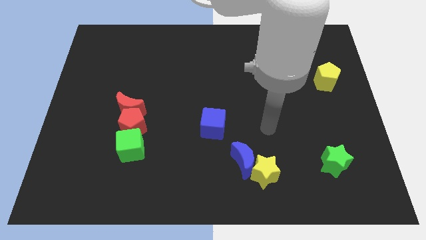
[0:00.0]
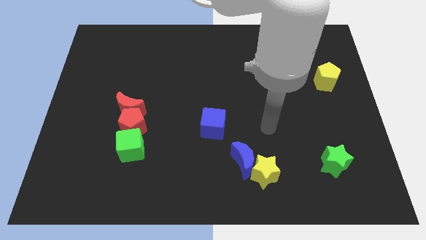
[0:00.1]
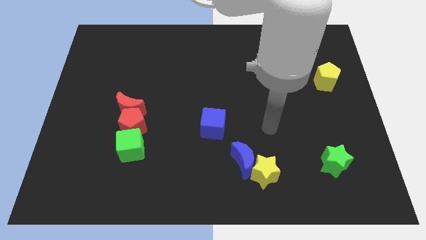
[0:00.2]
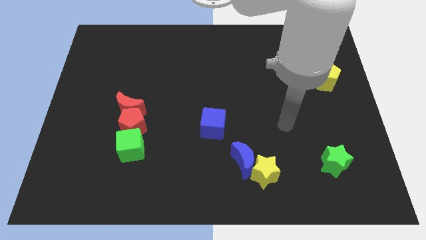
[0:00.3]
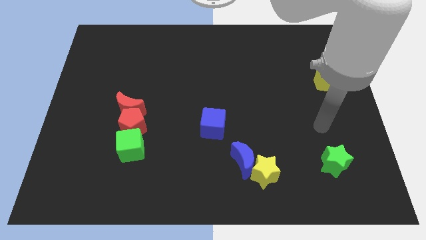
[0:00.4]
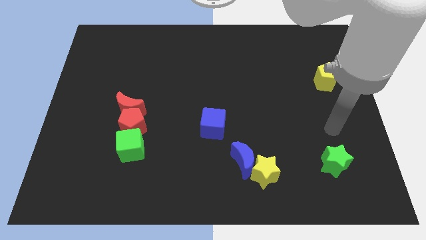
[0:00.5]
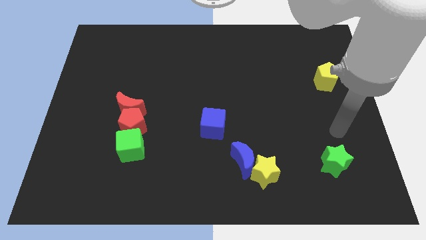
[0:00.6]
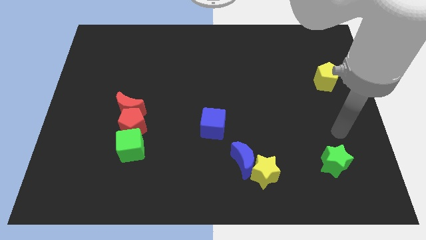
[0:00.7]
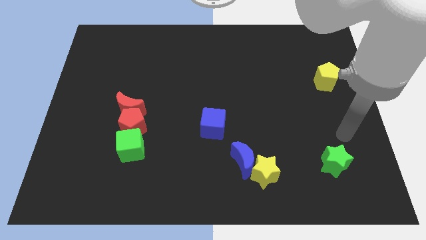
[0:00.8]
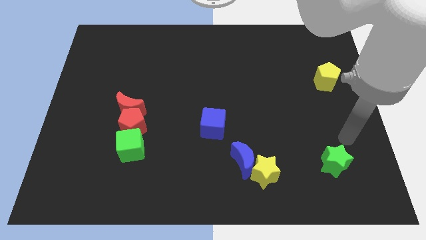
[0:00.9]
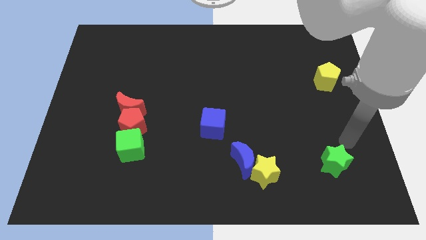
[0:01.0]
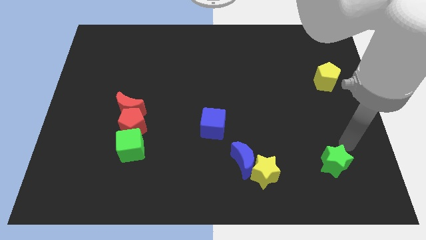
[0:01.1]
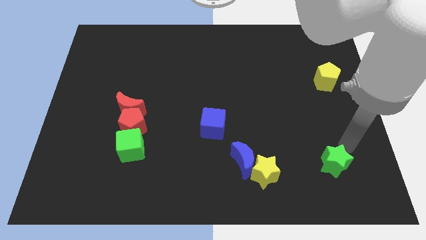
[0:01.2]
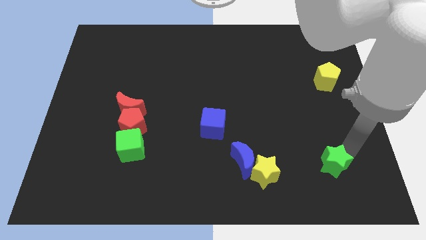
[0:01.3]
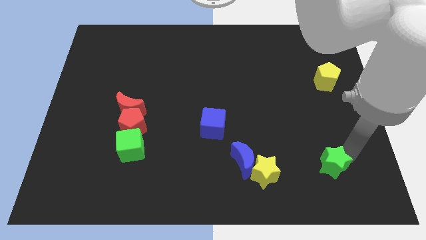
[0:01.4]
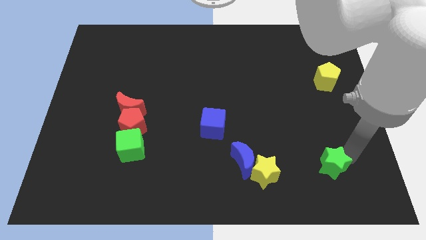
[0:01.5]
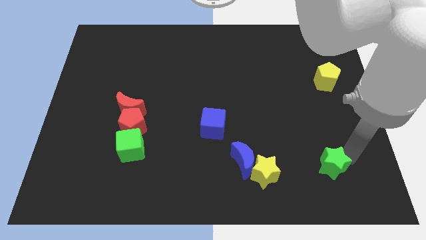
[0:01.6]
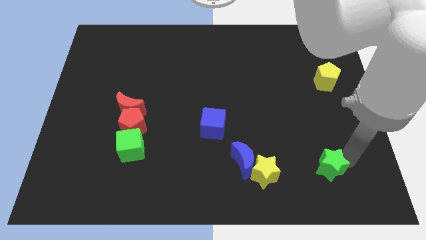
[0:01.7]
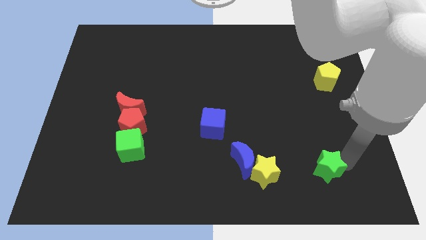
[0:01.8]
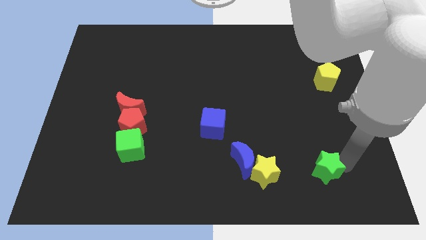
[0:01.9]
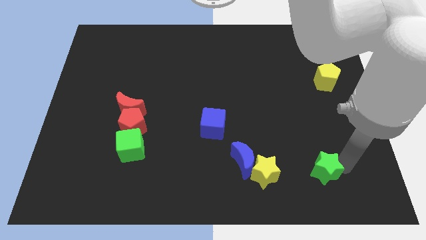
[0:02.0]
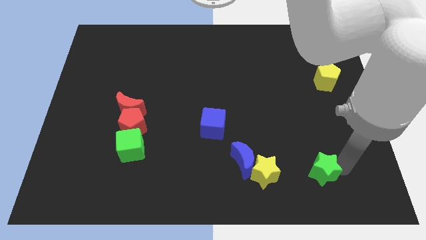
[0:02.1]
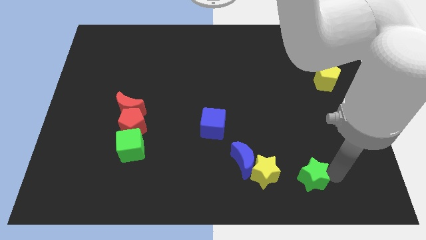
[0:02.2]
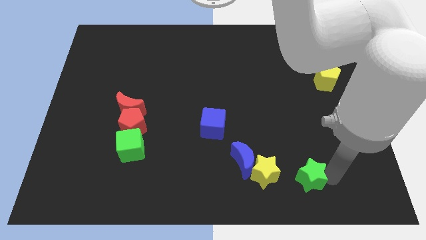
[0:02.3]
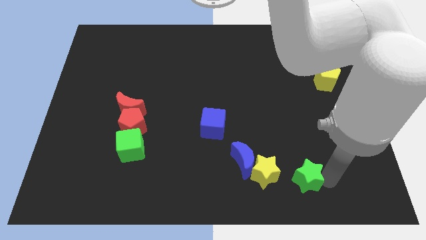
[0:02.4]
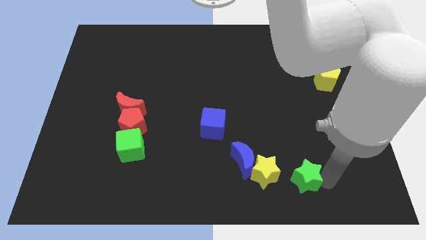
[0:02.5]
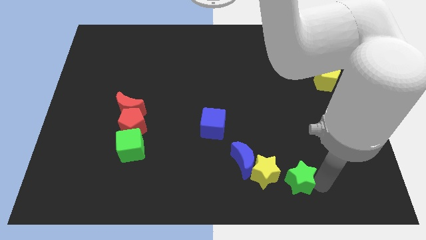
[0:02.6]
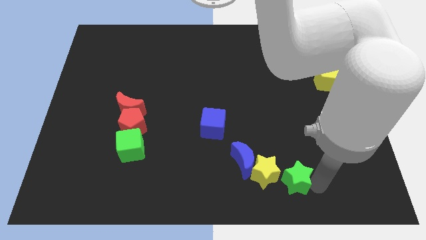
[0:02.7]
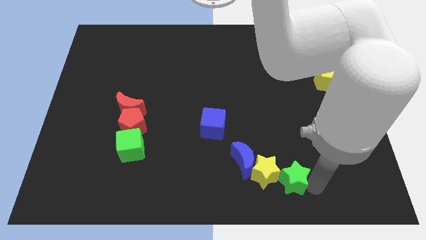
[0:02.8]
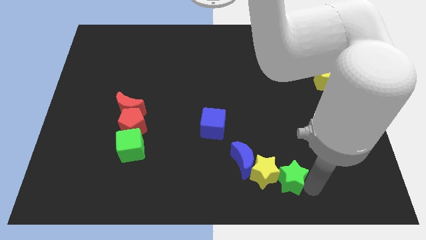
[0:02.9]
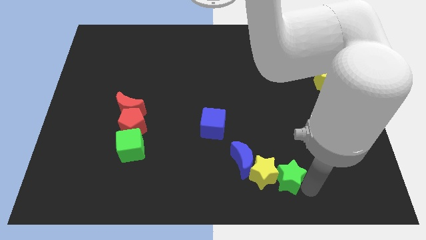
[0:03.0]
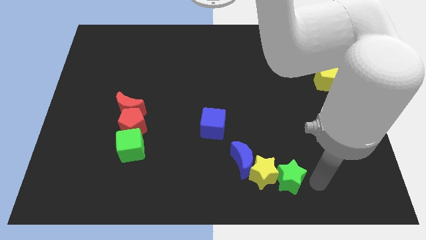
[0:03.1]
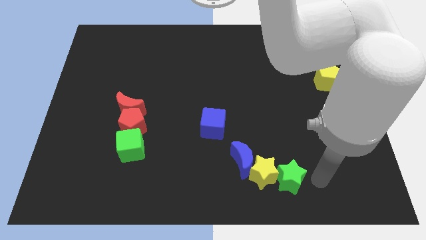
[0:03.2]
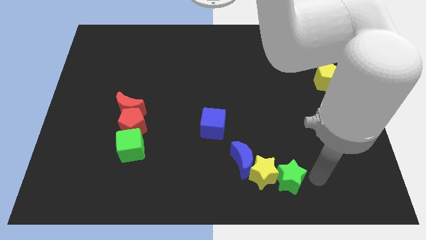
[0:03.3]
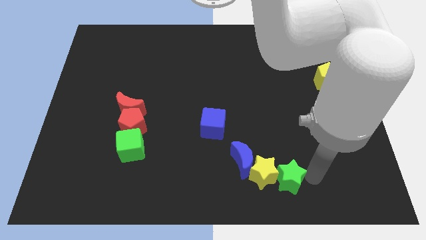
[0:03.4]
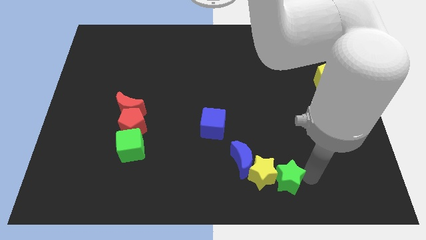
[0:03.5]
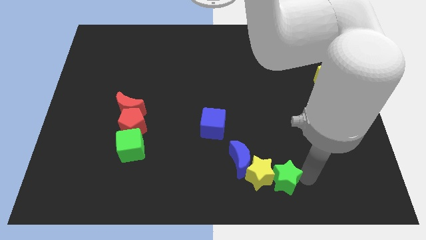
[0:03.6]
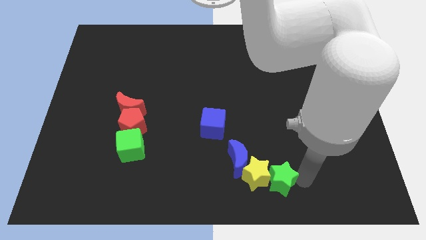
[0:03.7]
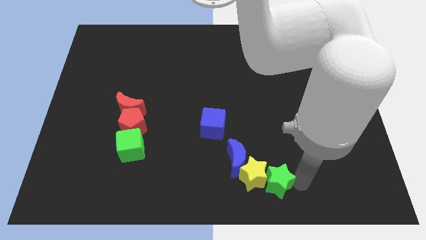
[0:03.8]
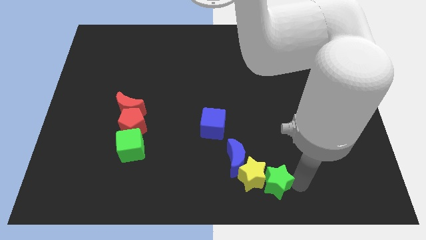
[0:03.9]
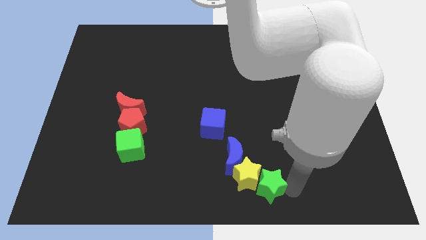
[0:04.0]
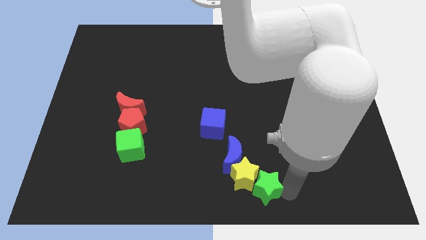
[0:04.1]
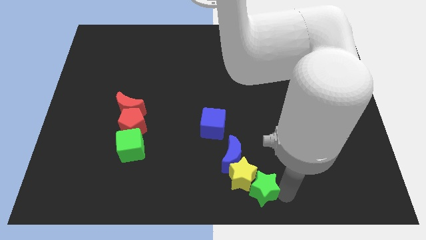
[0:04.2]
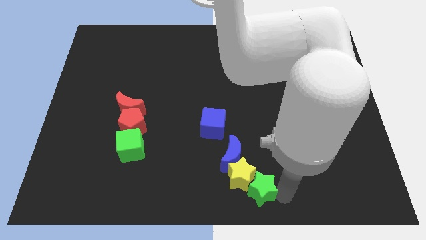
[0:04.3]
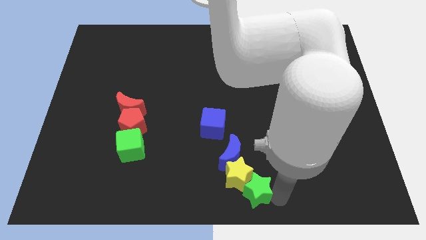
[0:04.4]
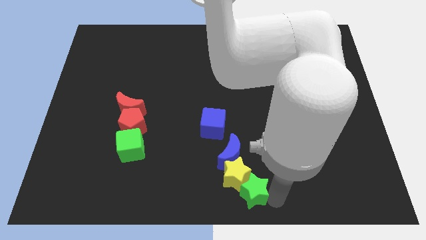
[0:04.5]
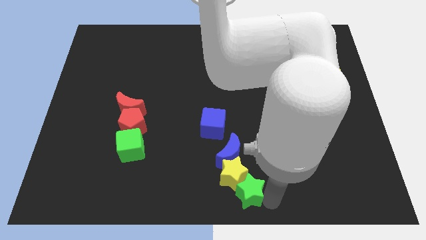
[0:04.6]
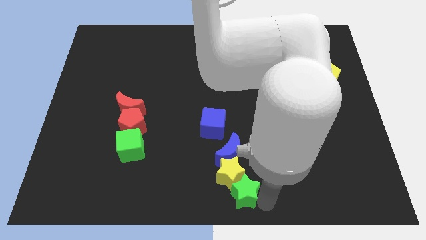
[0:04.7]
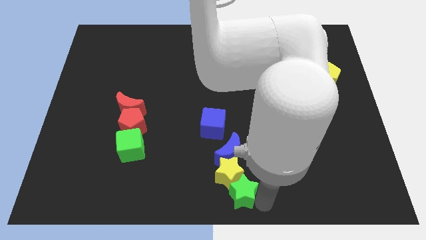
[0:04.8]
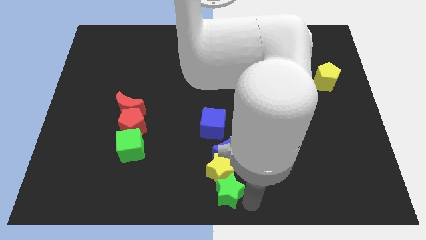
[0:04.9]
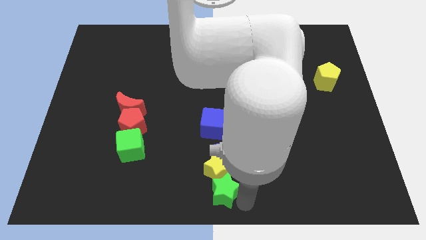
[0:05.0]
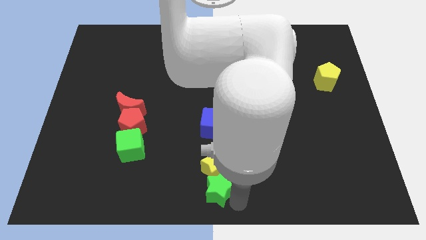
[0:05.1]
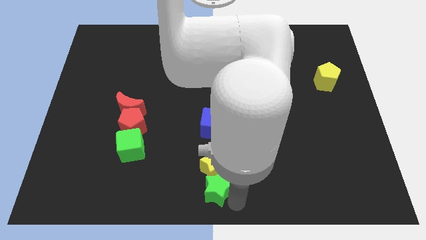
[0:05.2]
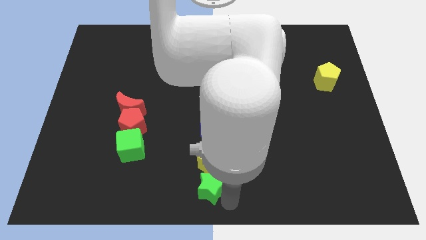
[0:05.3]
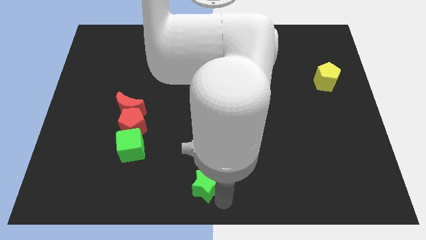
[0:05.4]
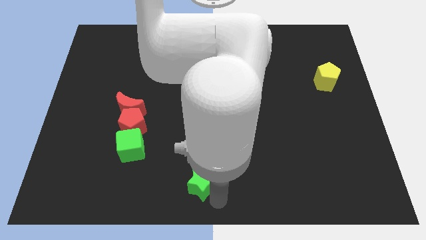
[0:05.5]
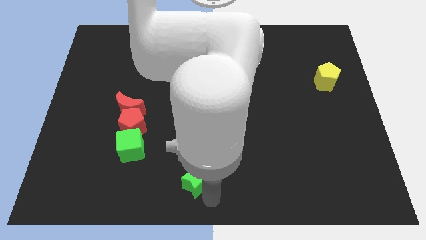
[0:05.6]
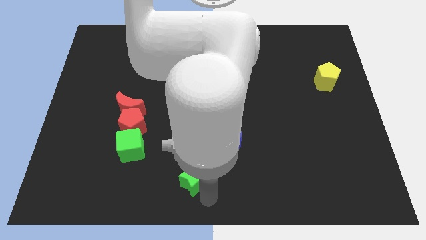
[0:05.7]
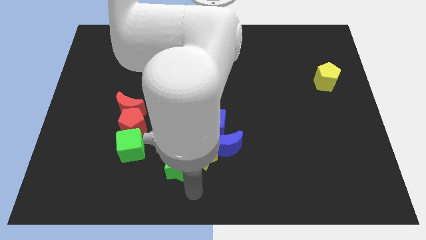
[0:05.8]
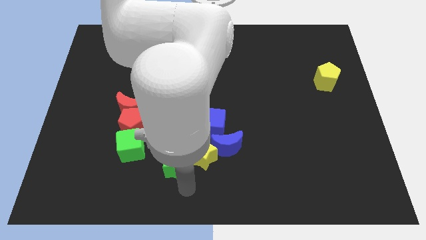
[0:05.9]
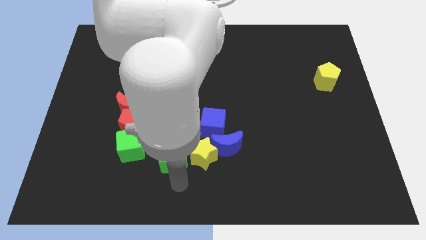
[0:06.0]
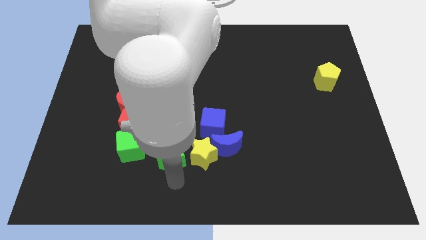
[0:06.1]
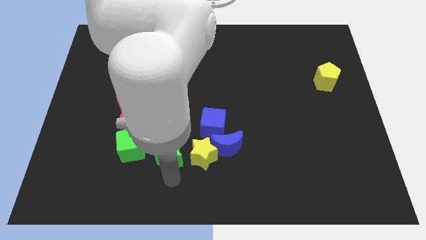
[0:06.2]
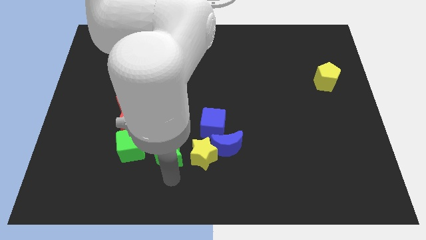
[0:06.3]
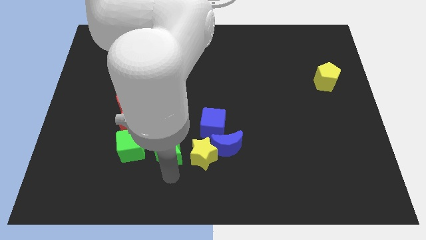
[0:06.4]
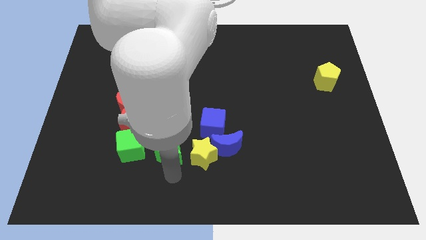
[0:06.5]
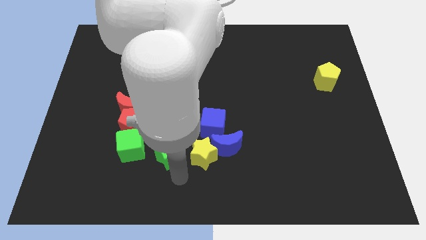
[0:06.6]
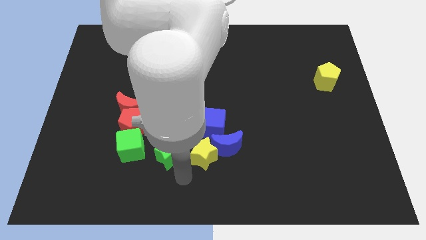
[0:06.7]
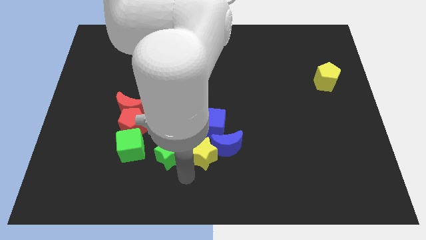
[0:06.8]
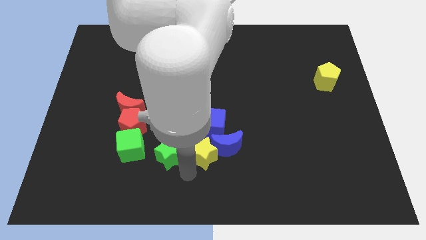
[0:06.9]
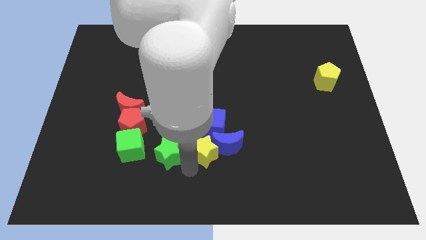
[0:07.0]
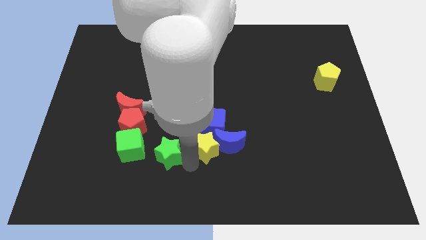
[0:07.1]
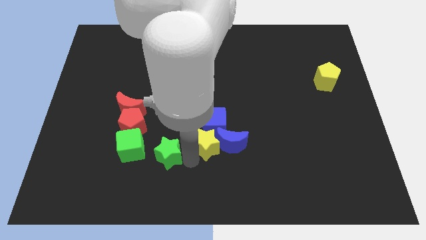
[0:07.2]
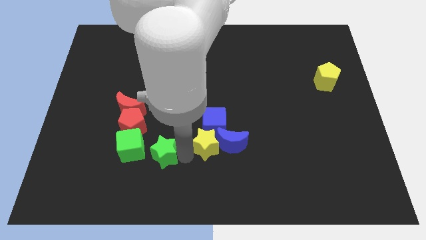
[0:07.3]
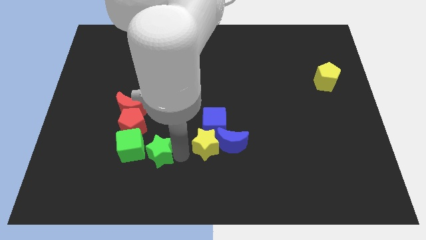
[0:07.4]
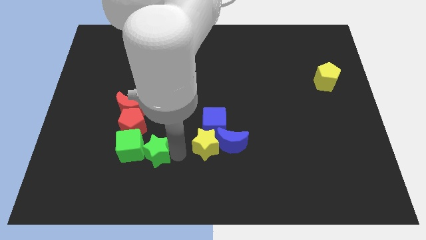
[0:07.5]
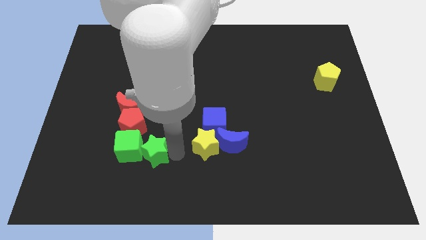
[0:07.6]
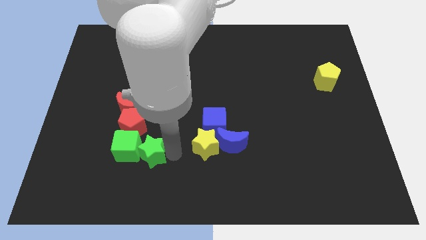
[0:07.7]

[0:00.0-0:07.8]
move the green star to the green cube
